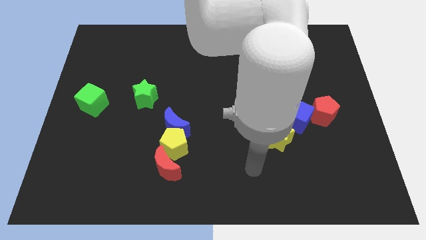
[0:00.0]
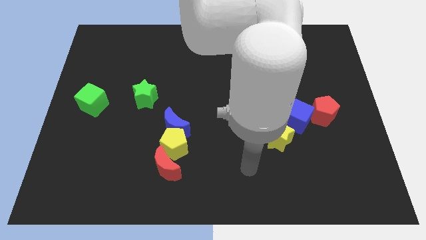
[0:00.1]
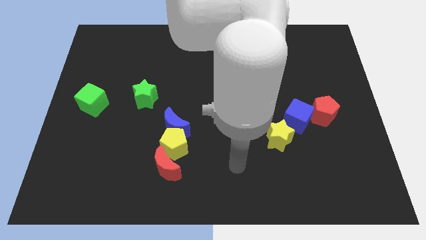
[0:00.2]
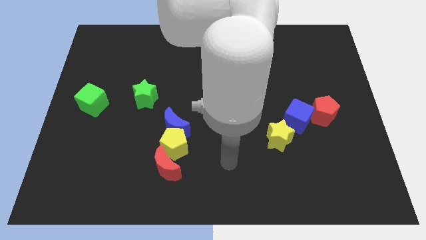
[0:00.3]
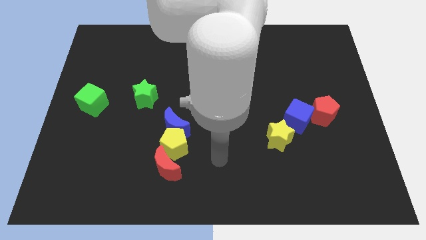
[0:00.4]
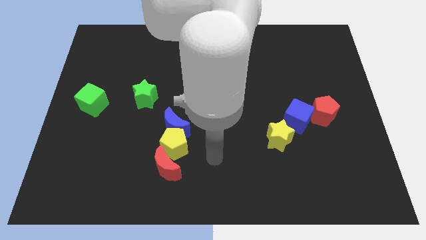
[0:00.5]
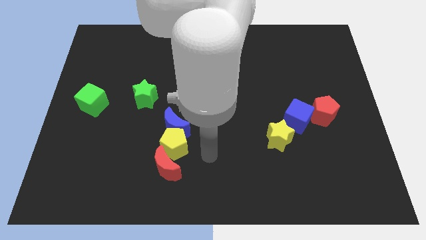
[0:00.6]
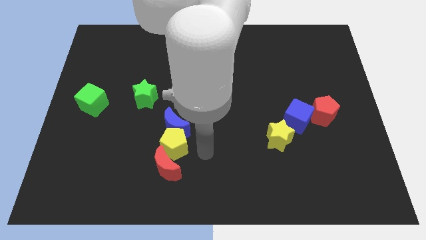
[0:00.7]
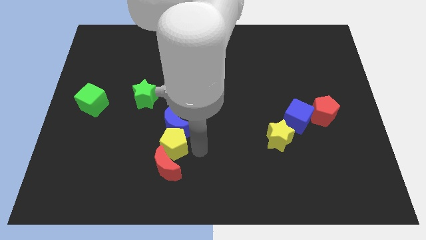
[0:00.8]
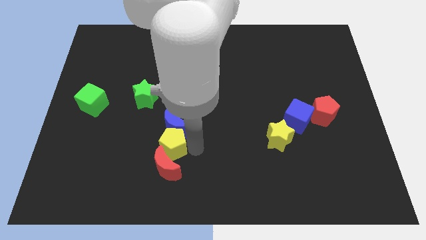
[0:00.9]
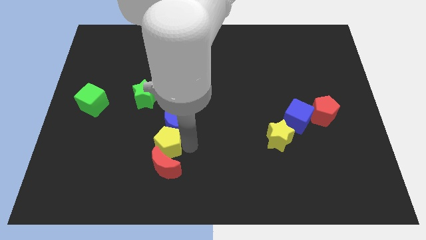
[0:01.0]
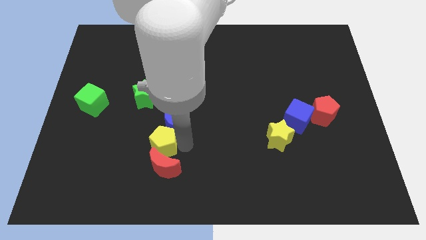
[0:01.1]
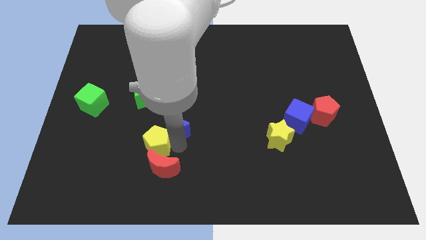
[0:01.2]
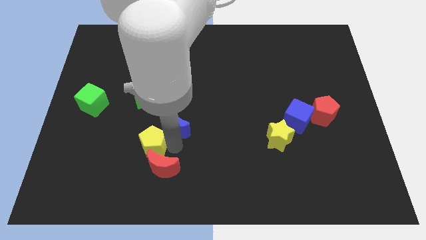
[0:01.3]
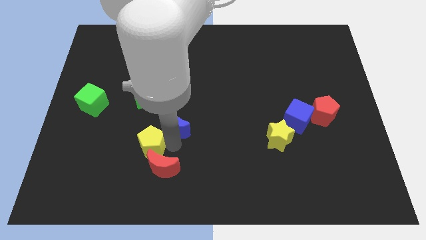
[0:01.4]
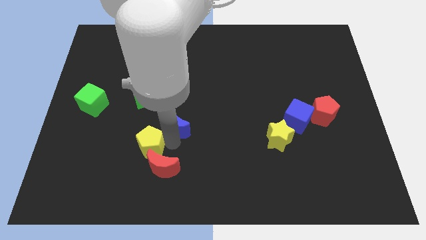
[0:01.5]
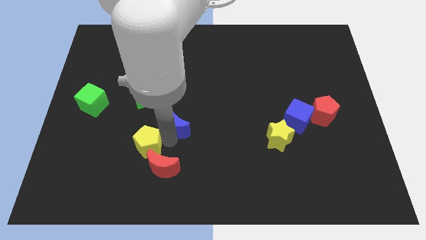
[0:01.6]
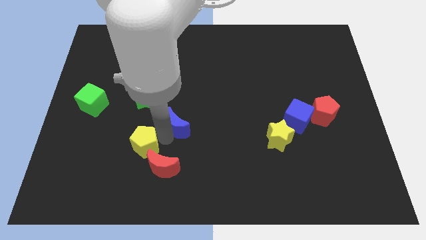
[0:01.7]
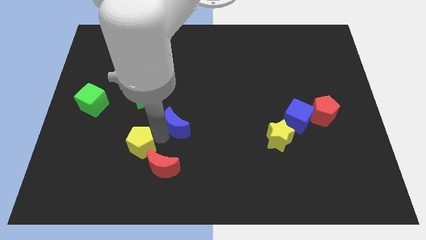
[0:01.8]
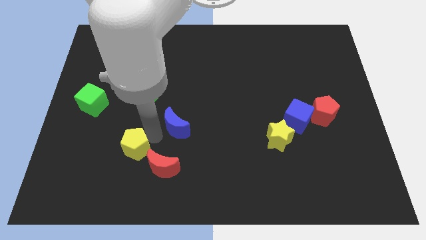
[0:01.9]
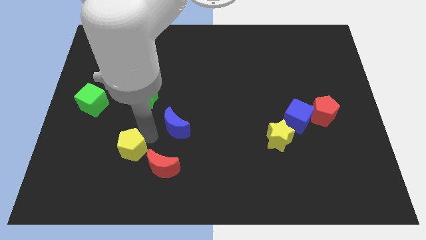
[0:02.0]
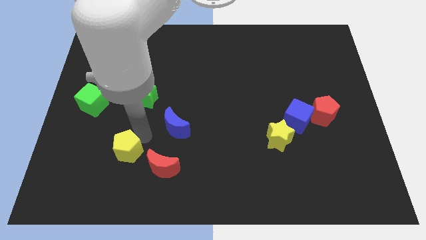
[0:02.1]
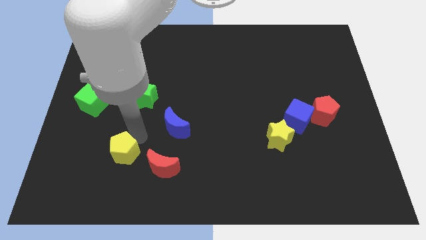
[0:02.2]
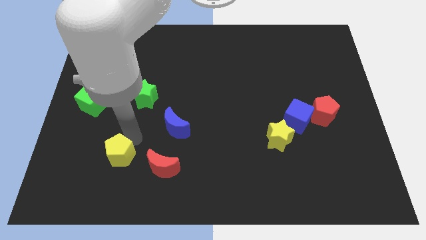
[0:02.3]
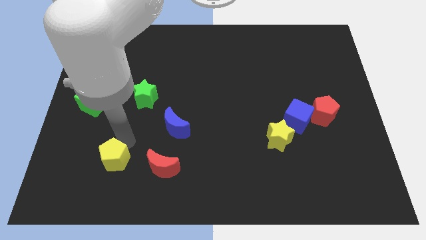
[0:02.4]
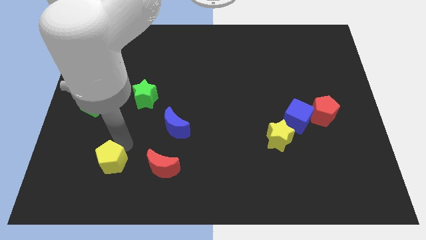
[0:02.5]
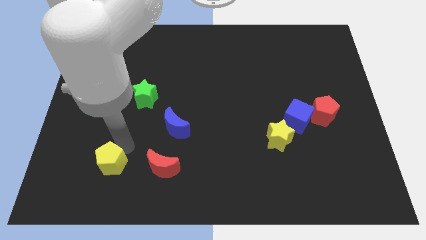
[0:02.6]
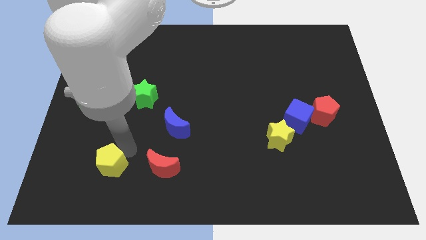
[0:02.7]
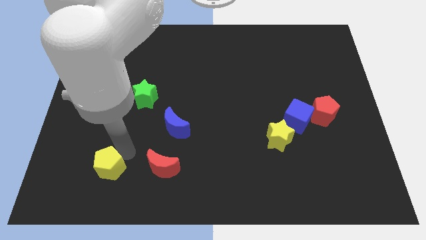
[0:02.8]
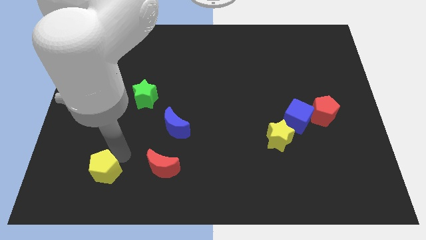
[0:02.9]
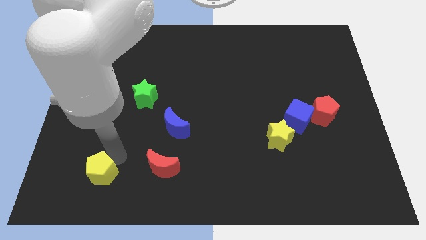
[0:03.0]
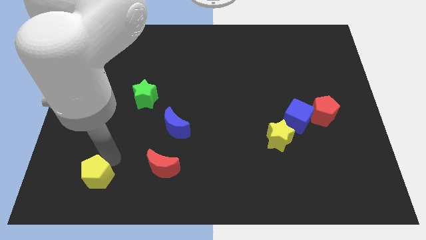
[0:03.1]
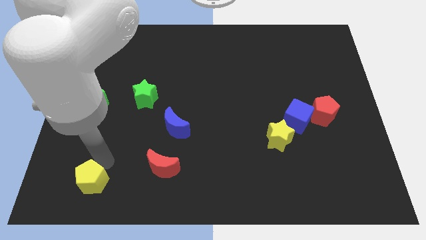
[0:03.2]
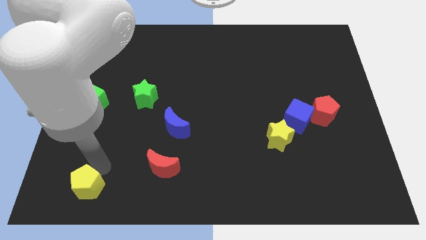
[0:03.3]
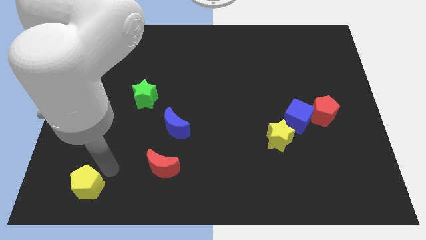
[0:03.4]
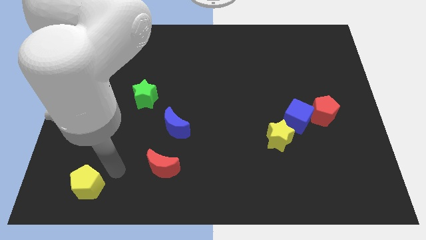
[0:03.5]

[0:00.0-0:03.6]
push the yellow pentagon towards the bottom left

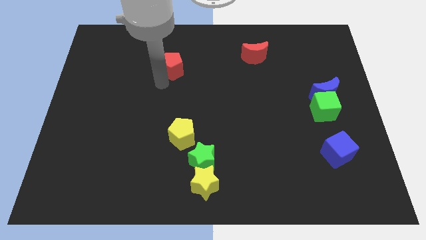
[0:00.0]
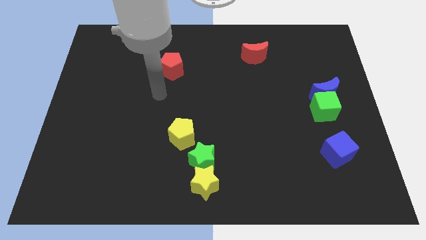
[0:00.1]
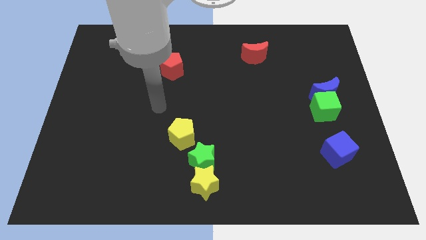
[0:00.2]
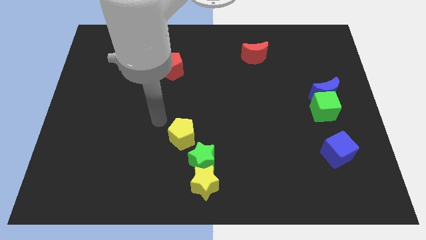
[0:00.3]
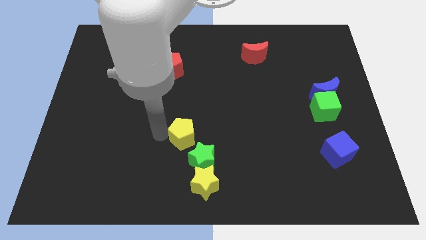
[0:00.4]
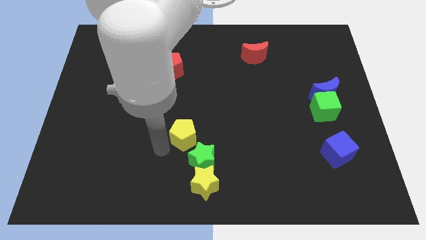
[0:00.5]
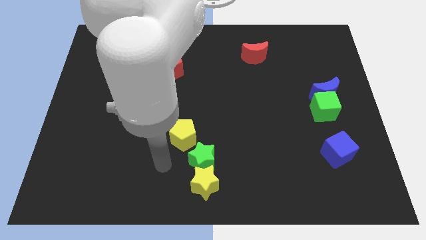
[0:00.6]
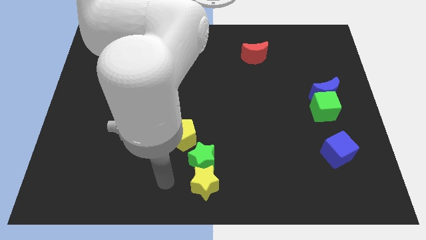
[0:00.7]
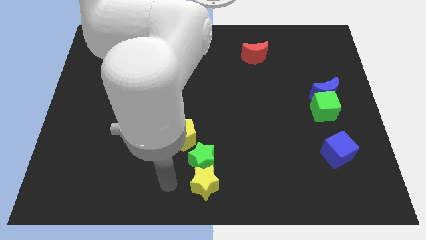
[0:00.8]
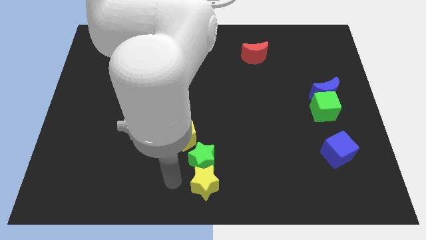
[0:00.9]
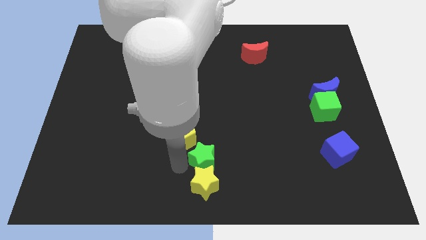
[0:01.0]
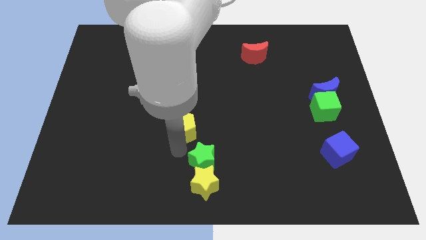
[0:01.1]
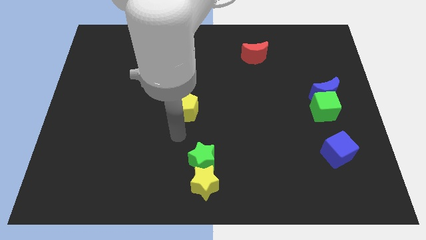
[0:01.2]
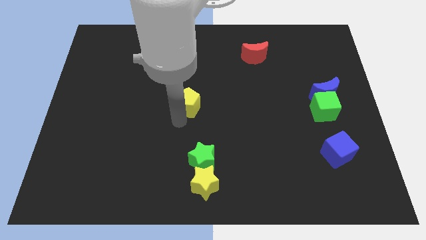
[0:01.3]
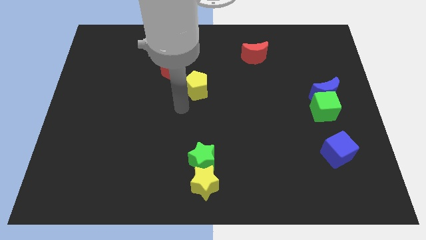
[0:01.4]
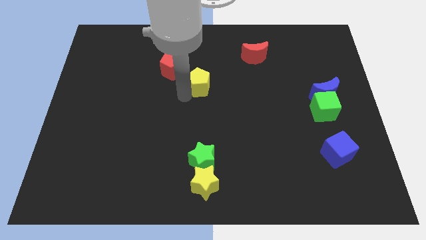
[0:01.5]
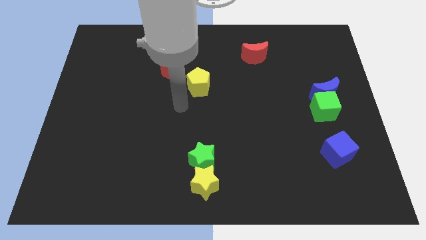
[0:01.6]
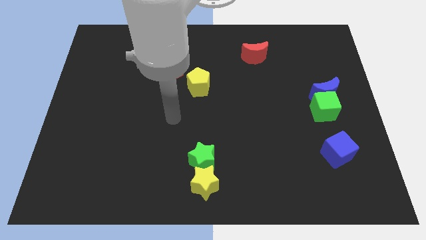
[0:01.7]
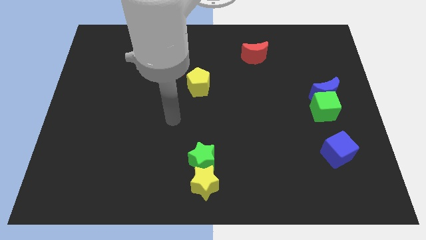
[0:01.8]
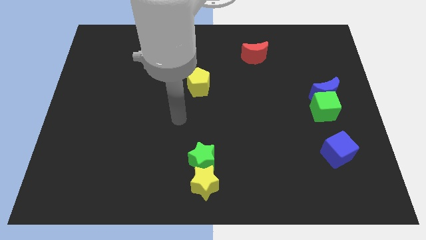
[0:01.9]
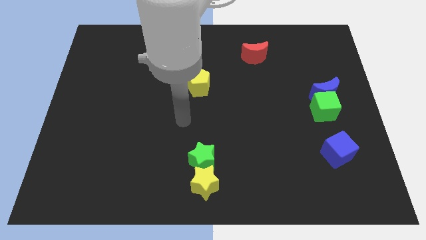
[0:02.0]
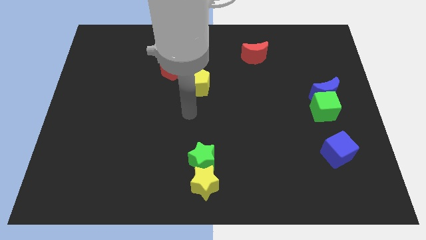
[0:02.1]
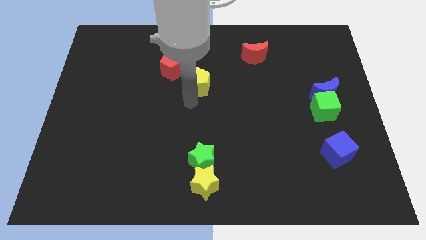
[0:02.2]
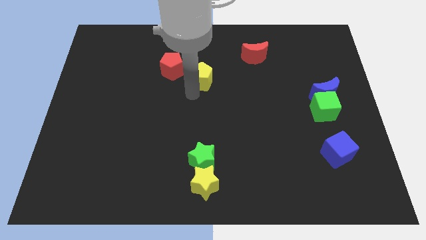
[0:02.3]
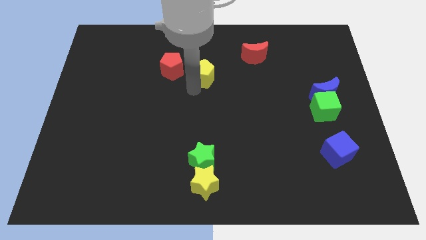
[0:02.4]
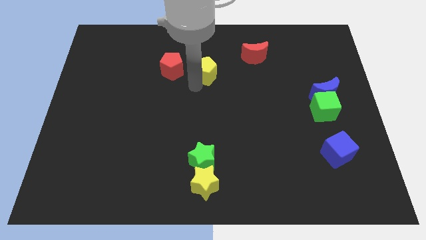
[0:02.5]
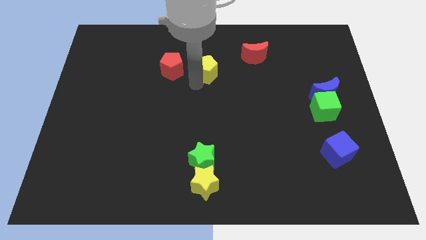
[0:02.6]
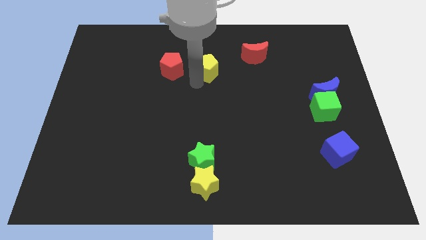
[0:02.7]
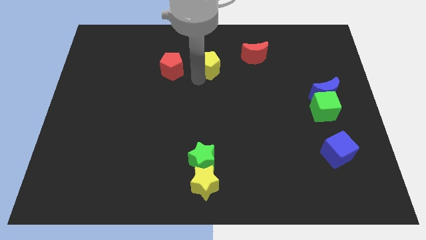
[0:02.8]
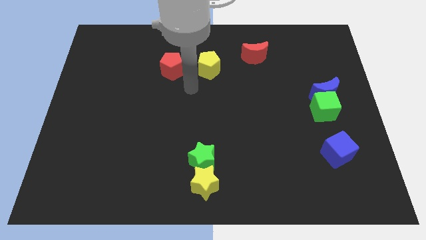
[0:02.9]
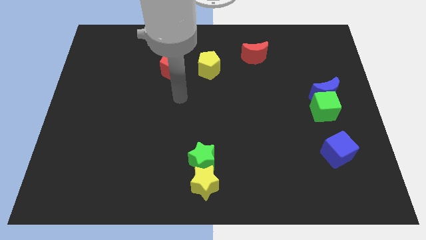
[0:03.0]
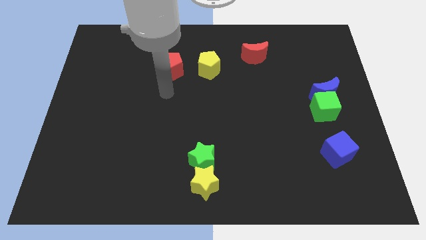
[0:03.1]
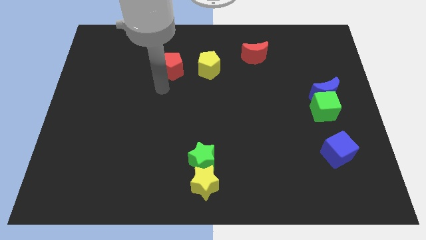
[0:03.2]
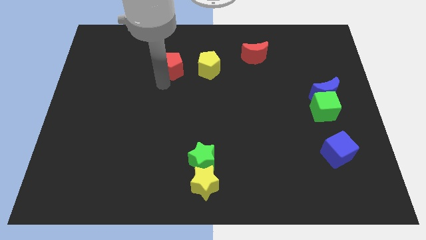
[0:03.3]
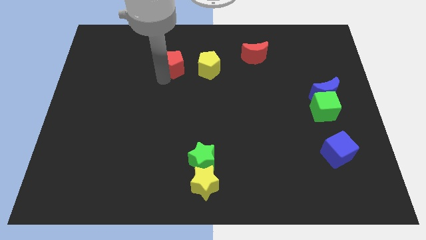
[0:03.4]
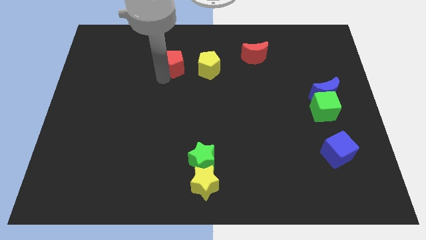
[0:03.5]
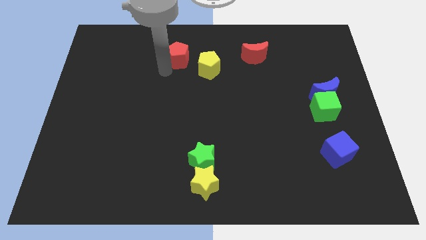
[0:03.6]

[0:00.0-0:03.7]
place the yellow pentagon to the right side of the red pentagon

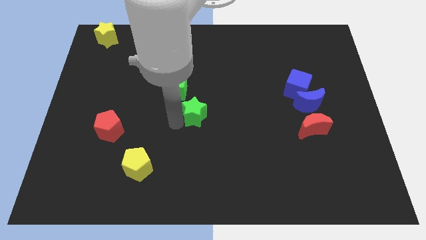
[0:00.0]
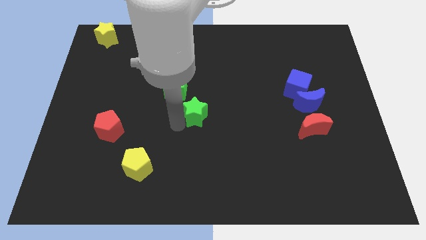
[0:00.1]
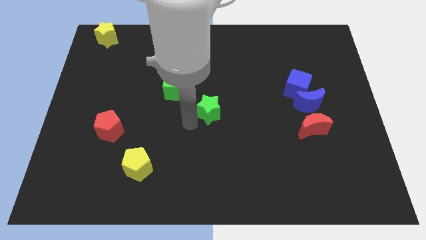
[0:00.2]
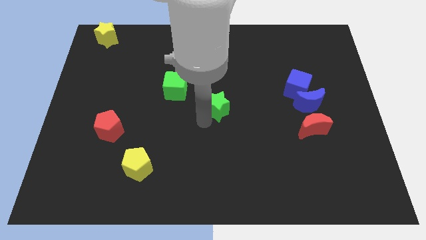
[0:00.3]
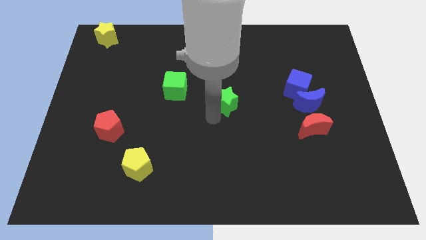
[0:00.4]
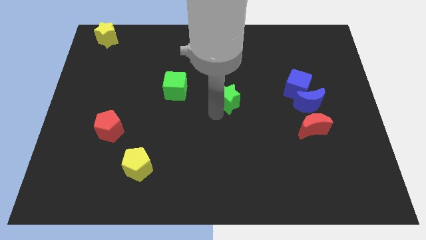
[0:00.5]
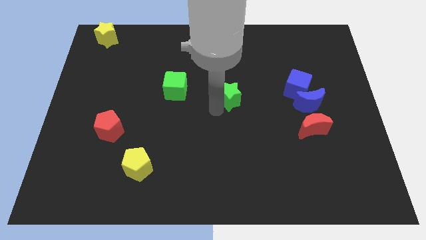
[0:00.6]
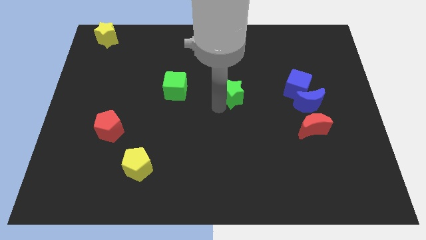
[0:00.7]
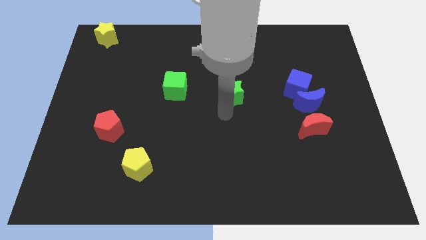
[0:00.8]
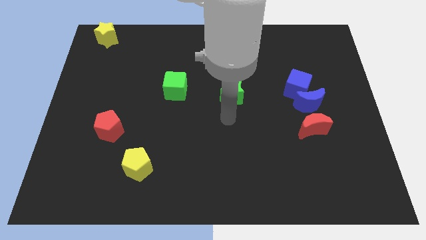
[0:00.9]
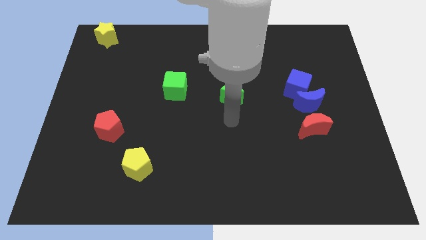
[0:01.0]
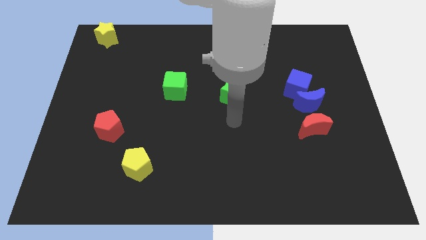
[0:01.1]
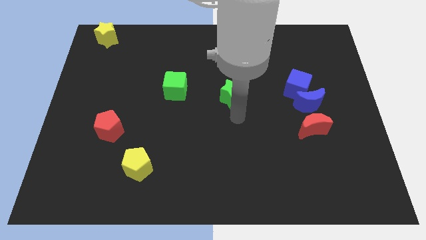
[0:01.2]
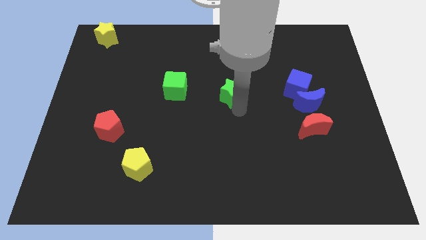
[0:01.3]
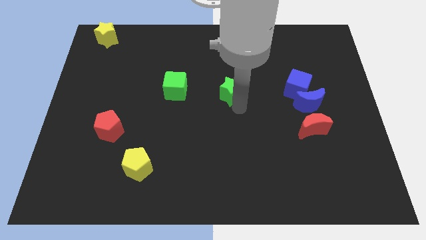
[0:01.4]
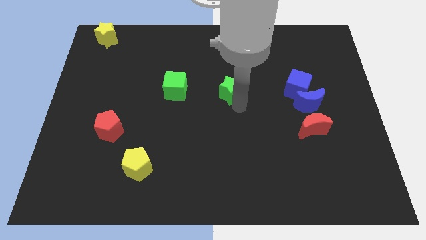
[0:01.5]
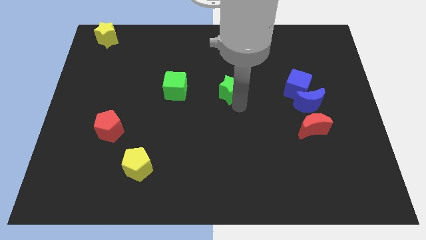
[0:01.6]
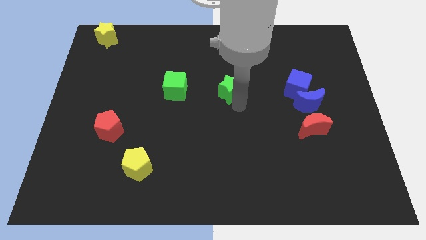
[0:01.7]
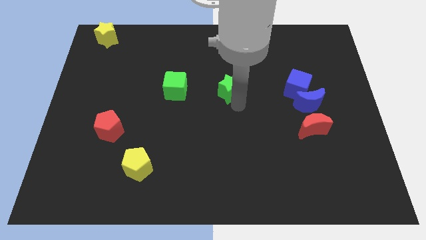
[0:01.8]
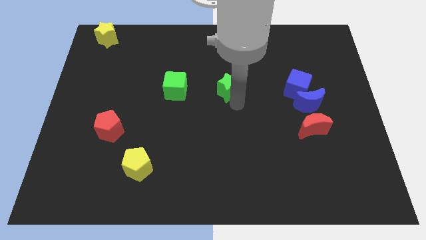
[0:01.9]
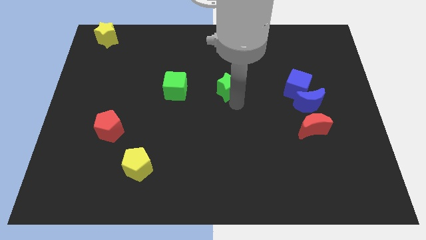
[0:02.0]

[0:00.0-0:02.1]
move the green star to the center of the board
